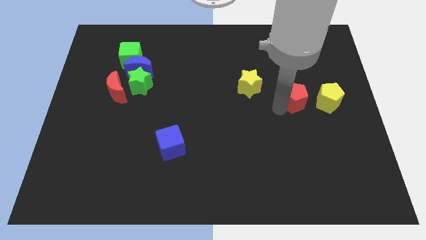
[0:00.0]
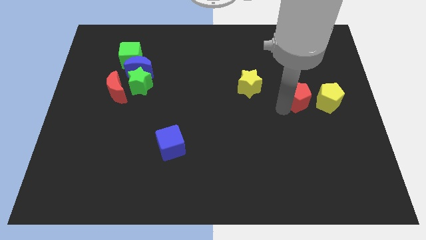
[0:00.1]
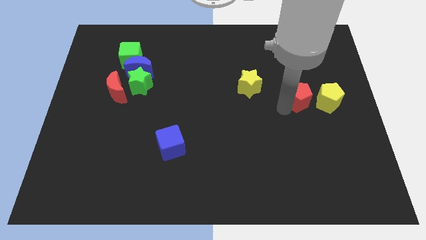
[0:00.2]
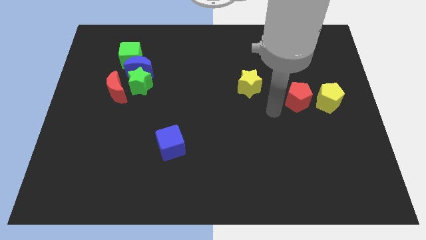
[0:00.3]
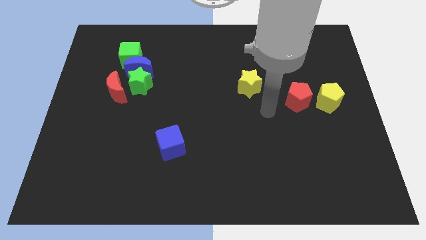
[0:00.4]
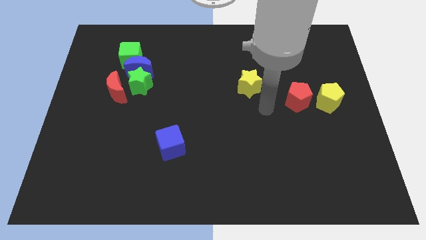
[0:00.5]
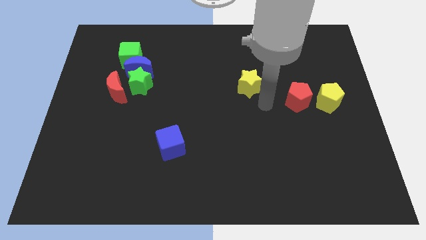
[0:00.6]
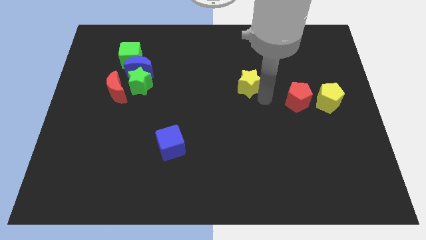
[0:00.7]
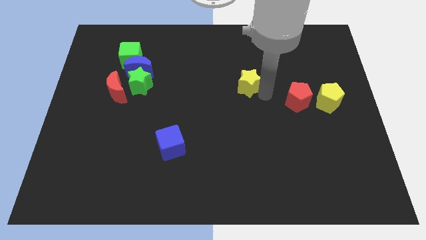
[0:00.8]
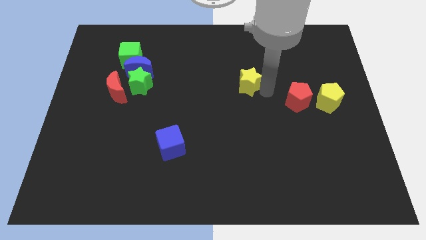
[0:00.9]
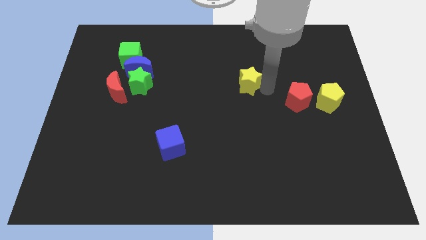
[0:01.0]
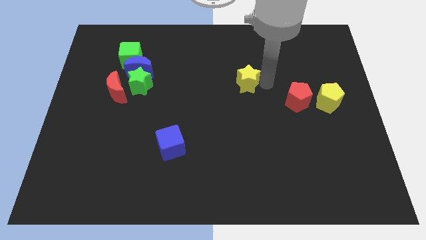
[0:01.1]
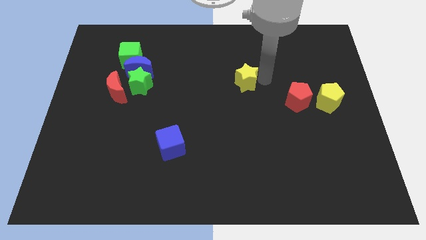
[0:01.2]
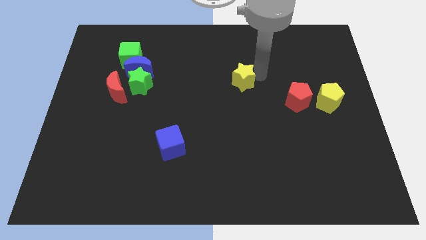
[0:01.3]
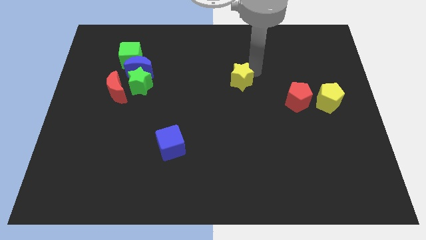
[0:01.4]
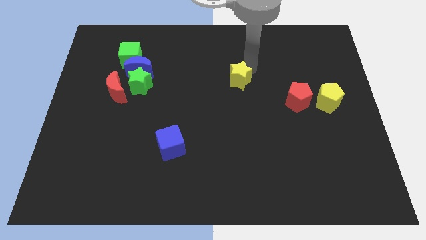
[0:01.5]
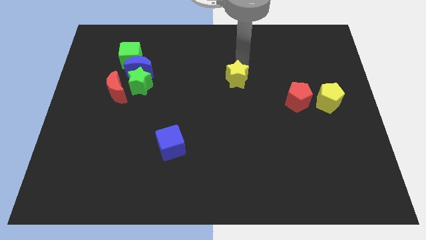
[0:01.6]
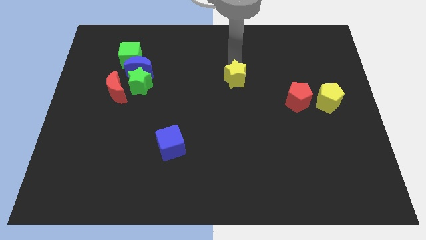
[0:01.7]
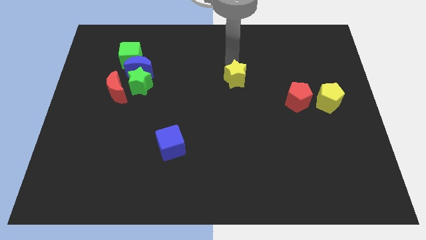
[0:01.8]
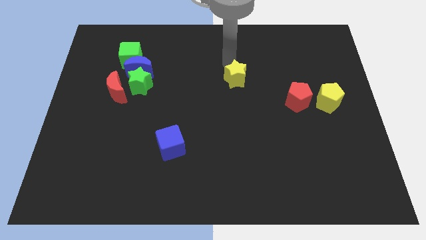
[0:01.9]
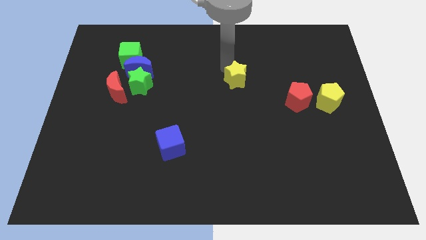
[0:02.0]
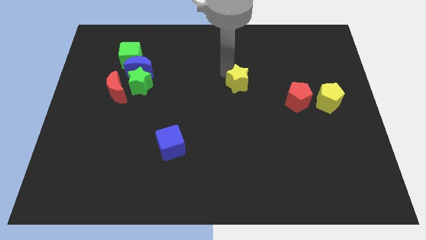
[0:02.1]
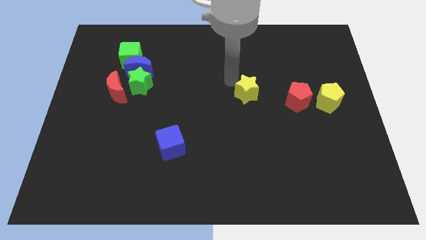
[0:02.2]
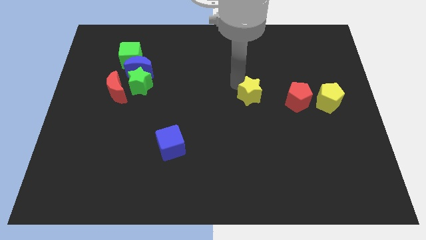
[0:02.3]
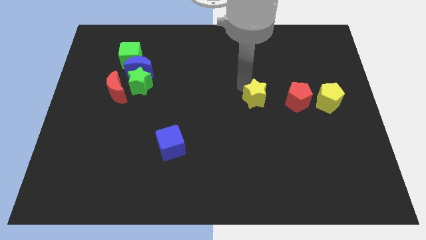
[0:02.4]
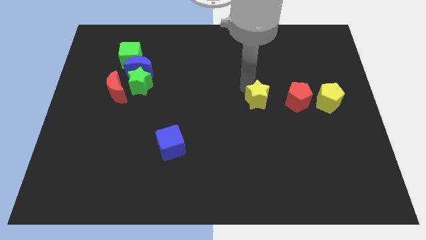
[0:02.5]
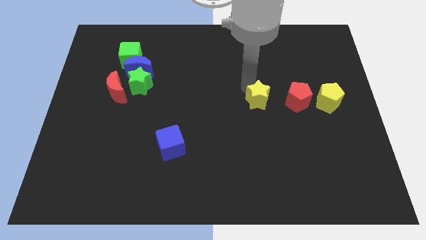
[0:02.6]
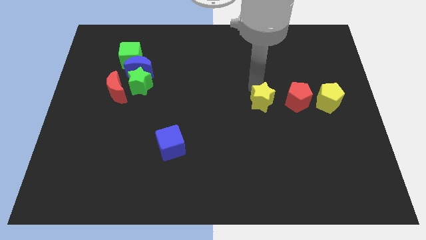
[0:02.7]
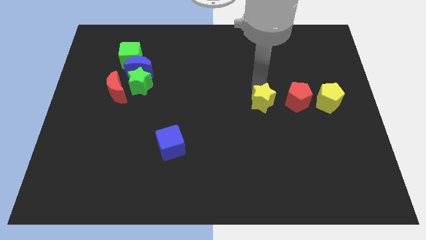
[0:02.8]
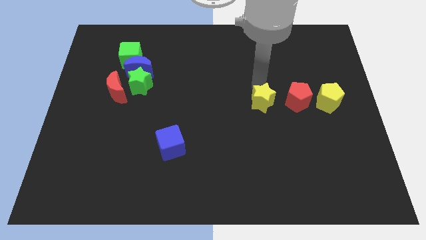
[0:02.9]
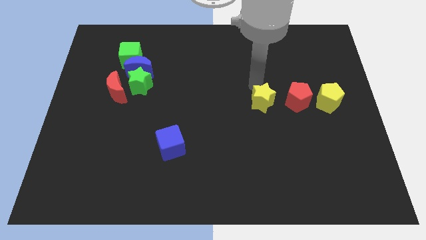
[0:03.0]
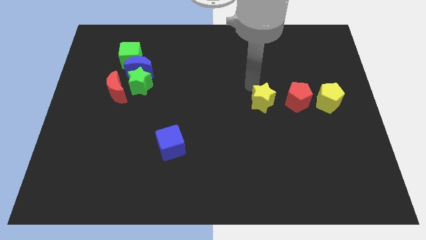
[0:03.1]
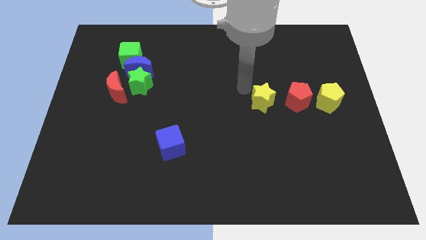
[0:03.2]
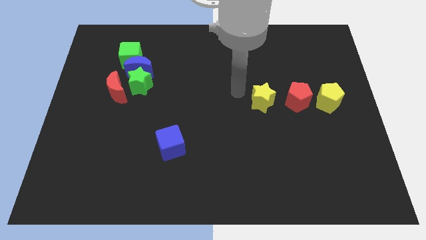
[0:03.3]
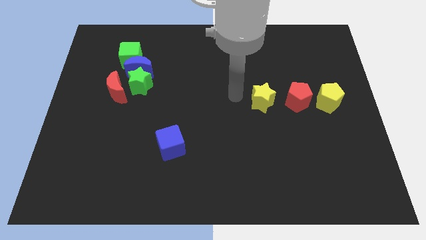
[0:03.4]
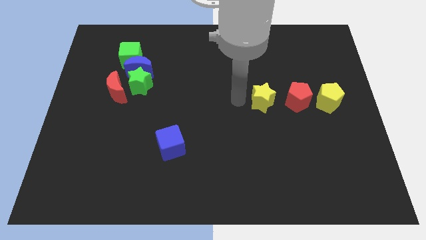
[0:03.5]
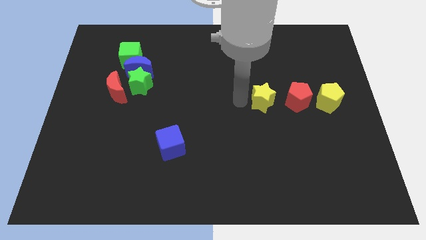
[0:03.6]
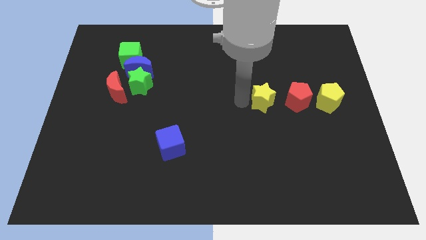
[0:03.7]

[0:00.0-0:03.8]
place the yellow star to the left of red pentagon

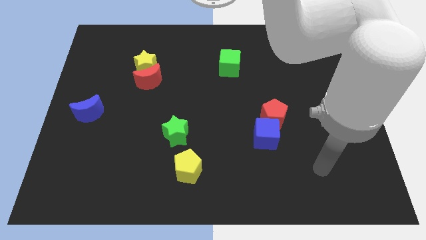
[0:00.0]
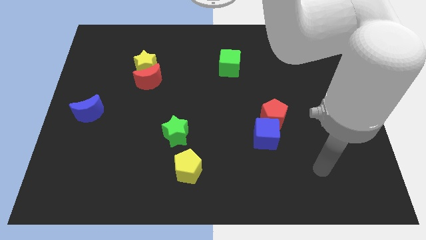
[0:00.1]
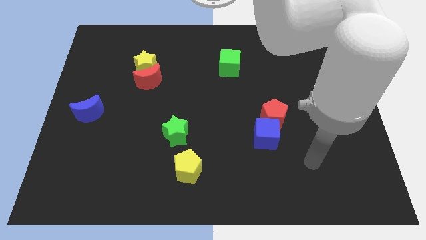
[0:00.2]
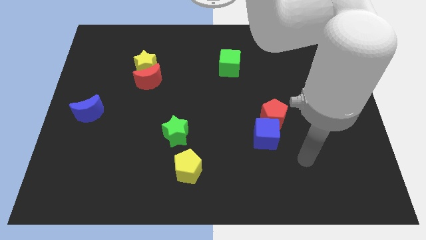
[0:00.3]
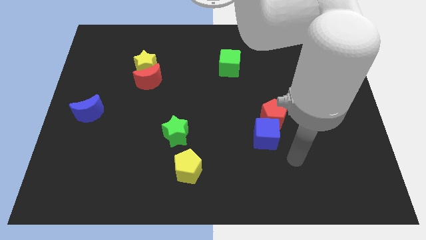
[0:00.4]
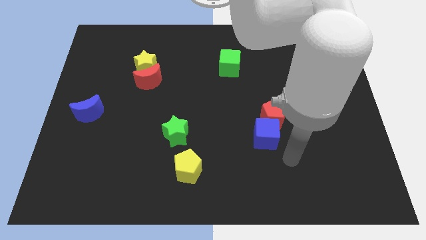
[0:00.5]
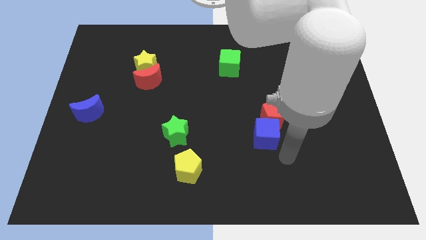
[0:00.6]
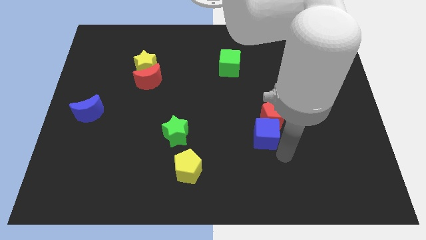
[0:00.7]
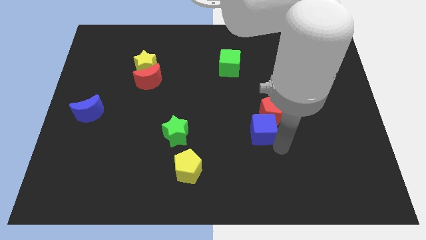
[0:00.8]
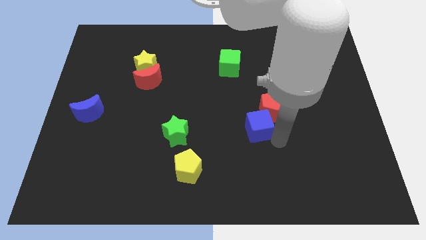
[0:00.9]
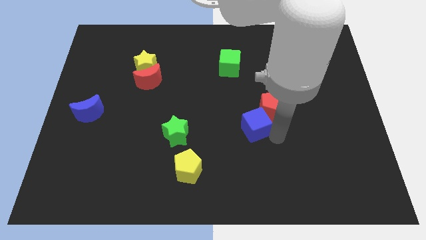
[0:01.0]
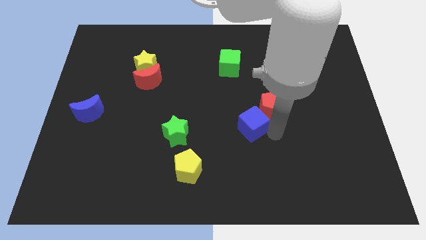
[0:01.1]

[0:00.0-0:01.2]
slightly push the blue cube into the center of the board

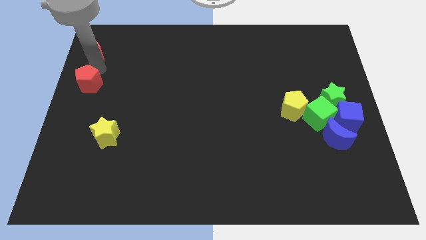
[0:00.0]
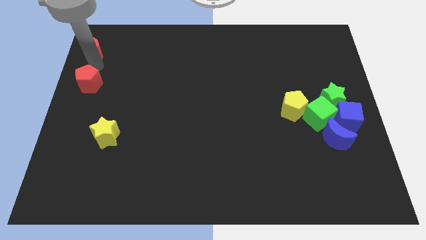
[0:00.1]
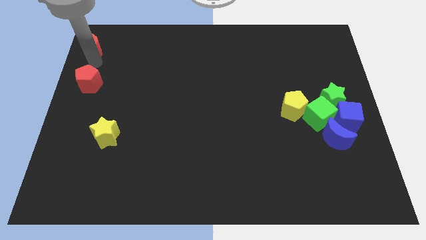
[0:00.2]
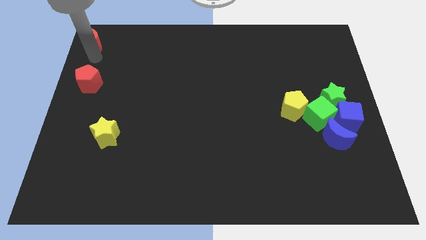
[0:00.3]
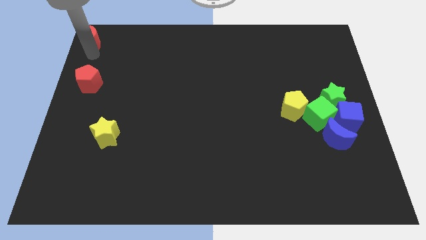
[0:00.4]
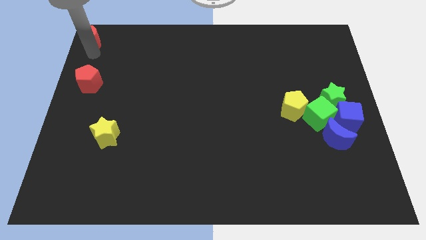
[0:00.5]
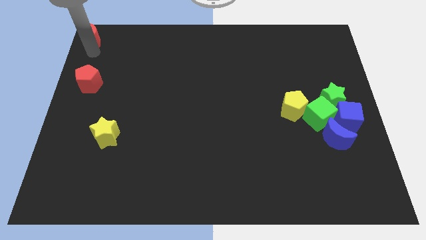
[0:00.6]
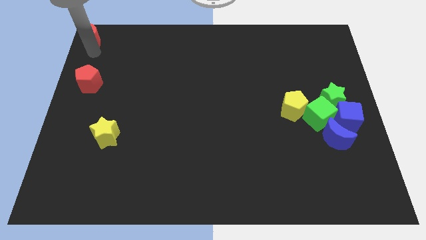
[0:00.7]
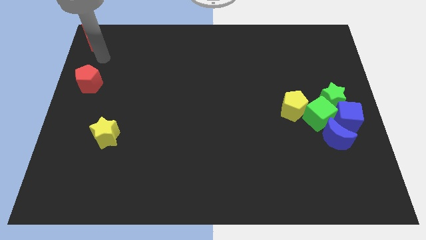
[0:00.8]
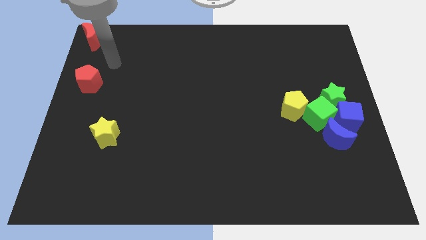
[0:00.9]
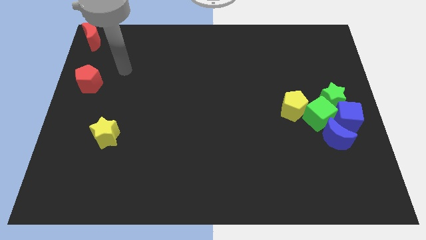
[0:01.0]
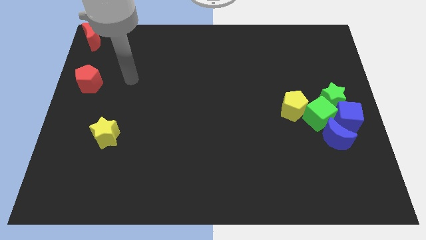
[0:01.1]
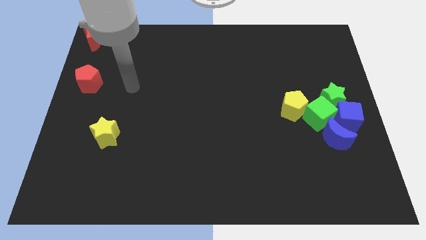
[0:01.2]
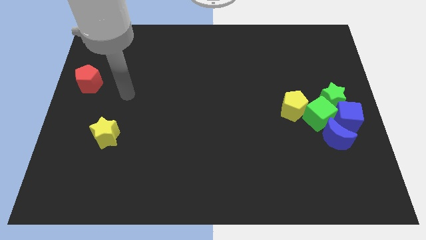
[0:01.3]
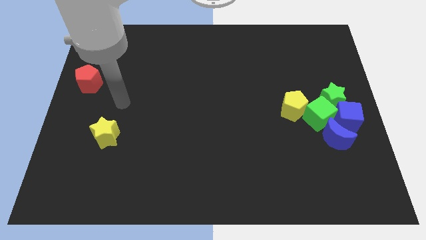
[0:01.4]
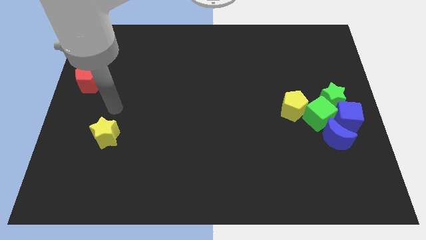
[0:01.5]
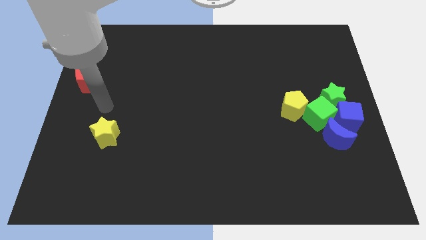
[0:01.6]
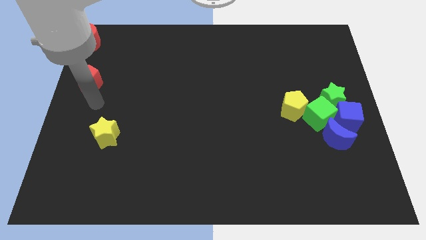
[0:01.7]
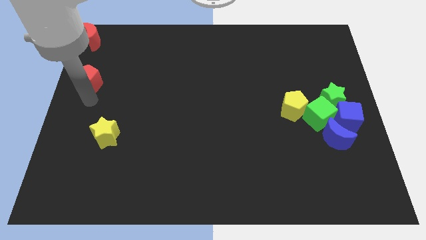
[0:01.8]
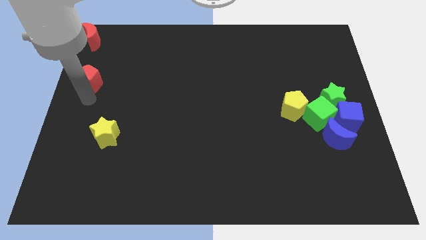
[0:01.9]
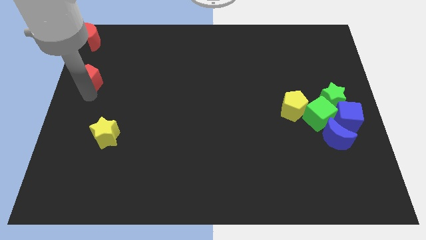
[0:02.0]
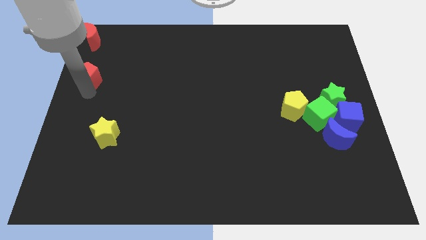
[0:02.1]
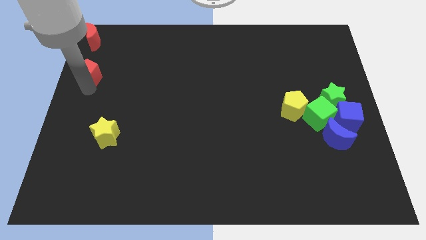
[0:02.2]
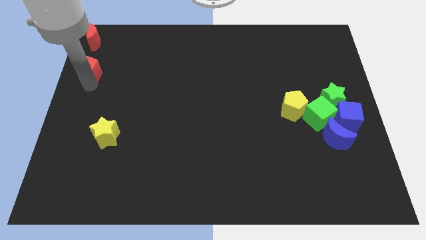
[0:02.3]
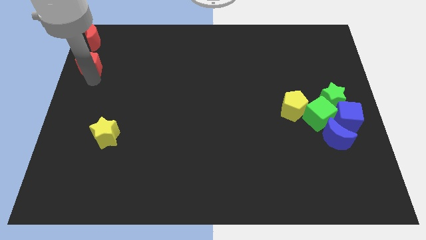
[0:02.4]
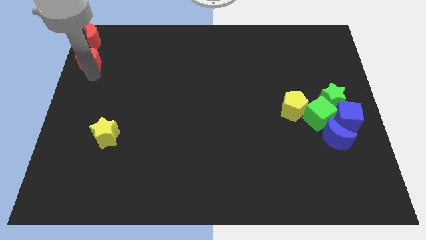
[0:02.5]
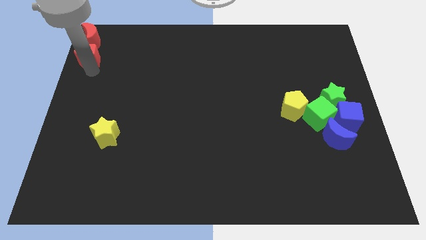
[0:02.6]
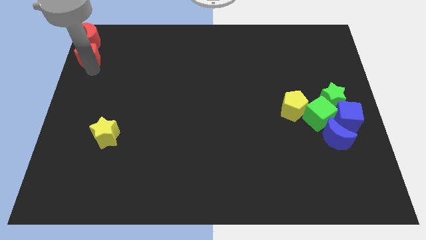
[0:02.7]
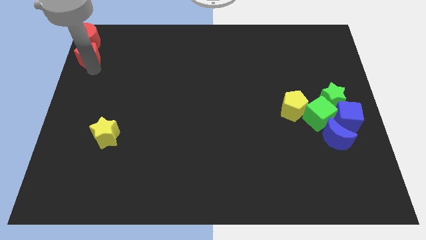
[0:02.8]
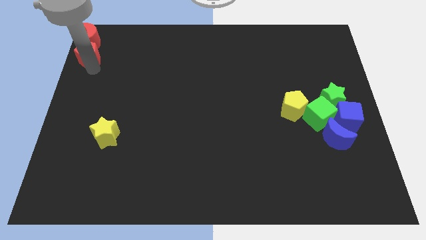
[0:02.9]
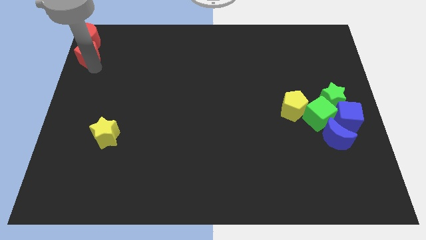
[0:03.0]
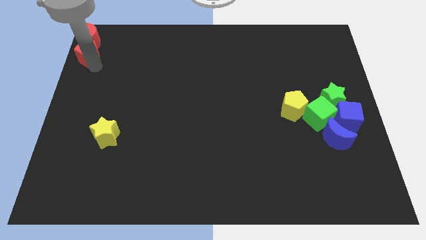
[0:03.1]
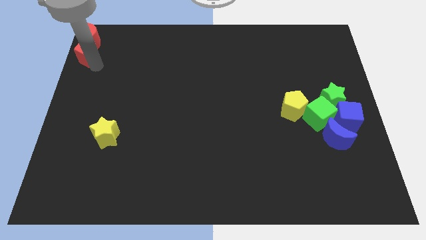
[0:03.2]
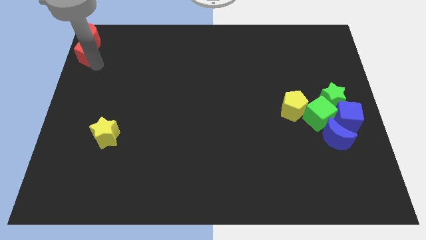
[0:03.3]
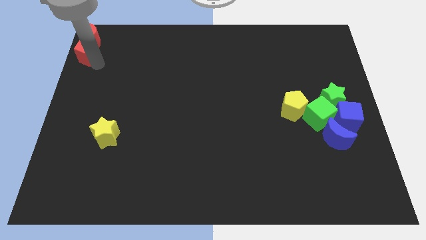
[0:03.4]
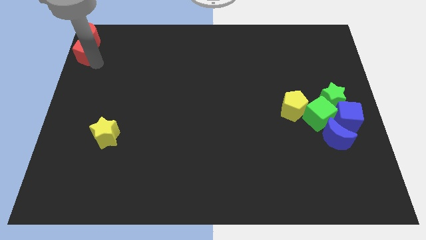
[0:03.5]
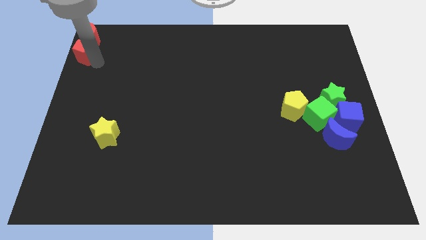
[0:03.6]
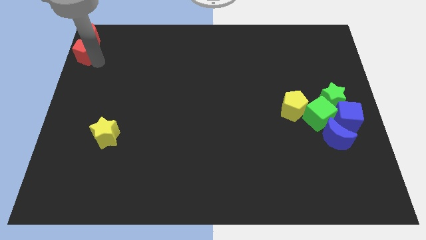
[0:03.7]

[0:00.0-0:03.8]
place the red blocks to the top left corner of the board

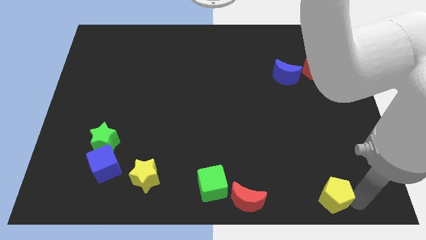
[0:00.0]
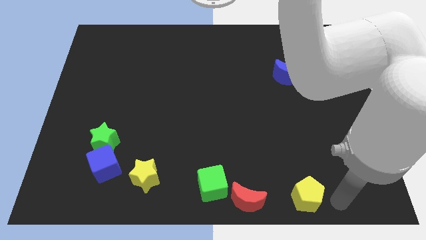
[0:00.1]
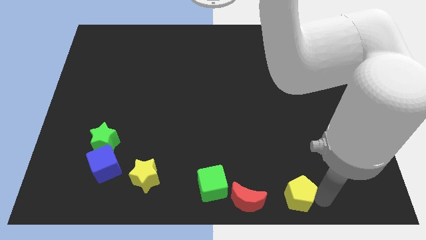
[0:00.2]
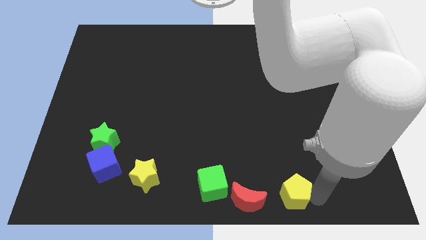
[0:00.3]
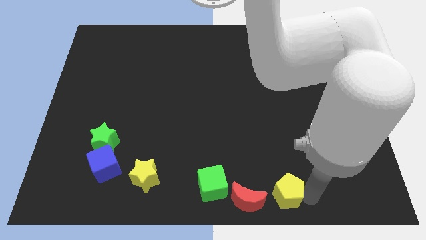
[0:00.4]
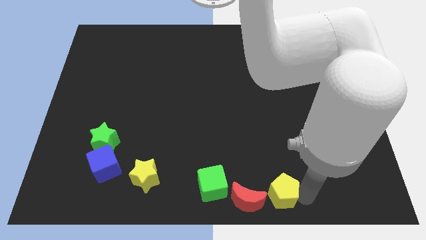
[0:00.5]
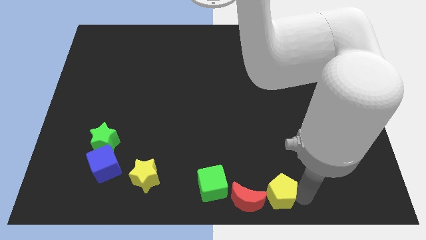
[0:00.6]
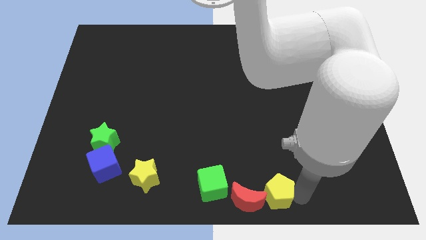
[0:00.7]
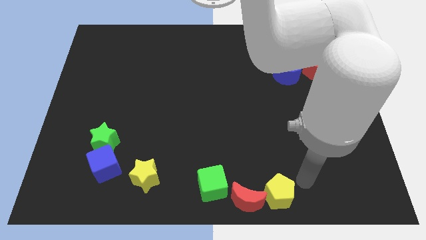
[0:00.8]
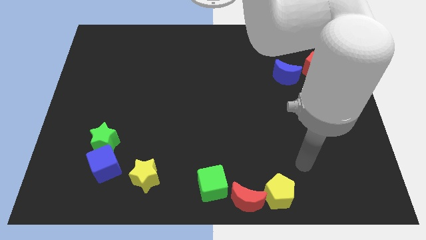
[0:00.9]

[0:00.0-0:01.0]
move the yellow pentagon into the red crescent
